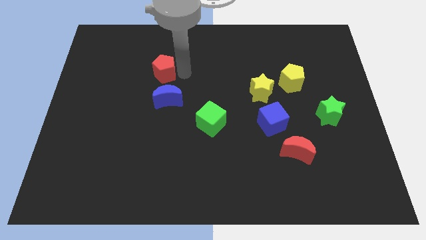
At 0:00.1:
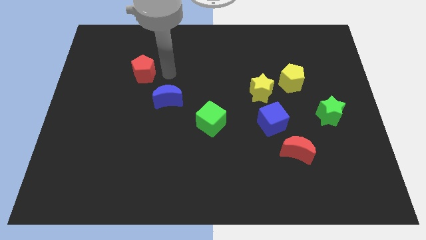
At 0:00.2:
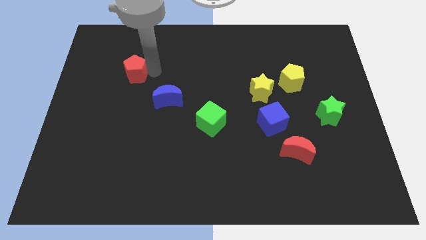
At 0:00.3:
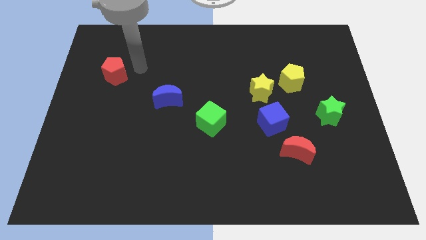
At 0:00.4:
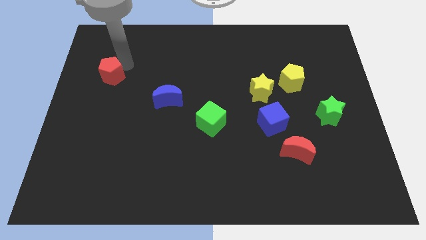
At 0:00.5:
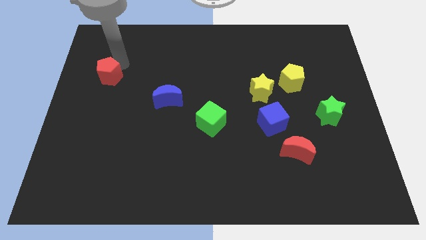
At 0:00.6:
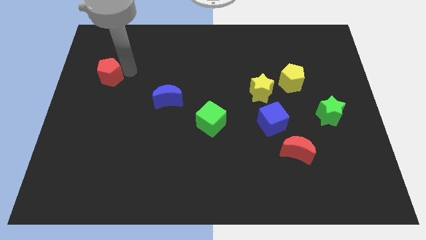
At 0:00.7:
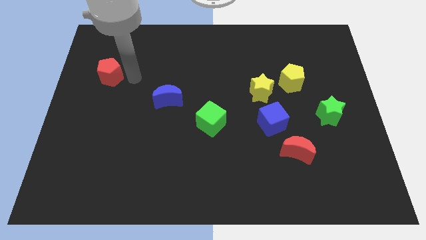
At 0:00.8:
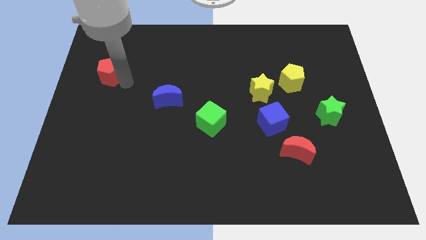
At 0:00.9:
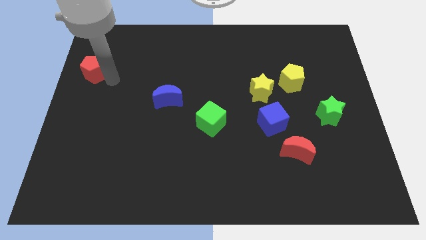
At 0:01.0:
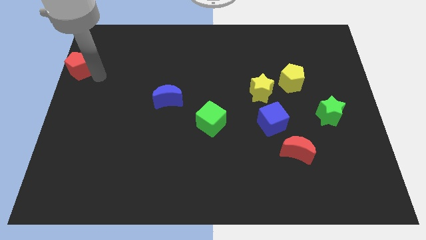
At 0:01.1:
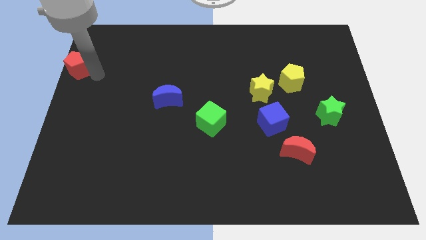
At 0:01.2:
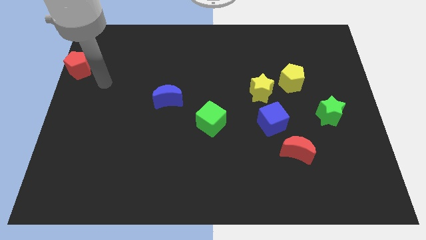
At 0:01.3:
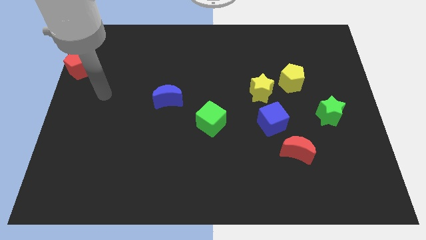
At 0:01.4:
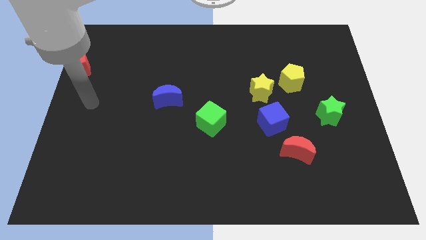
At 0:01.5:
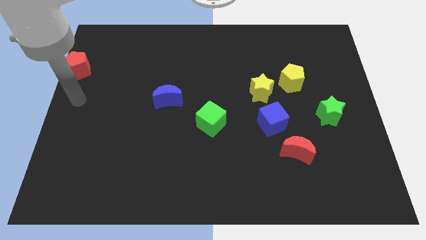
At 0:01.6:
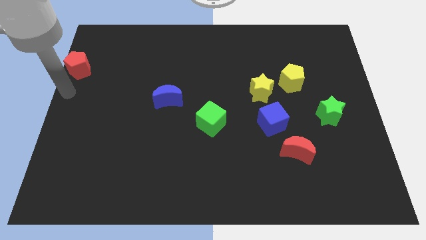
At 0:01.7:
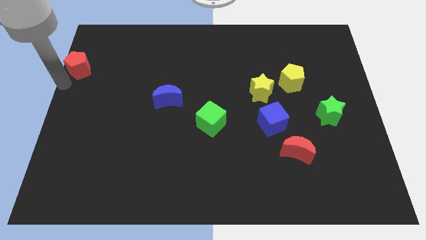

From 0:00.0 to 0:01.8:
move the red pentagon towards the left side

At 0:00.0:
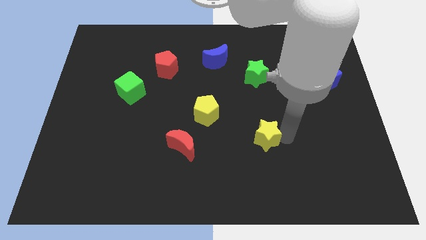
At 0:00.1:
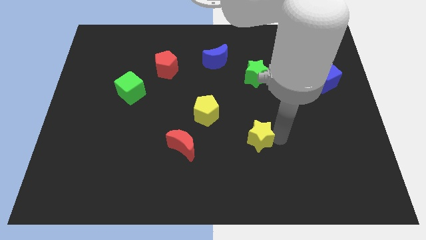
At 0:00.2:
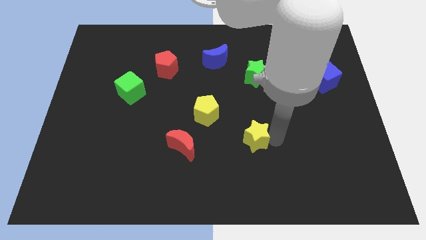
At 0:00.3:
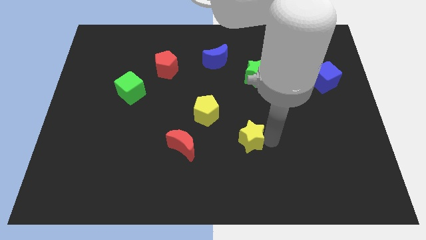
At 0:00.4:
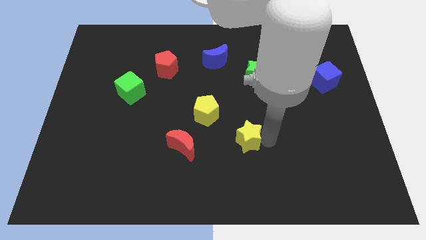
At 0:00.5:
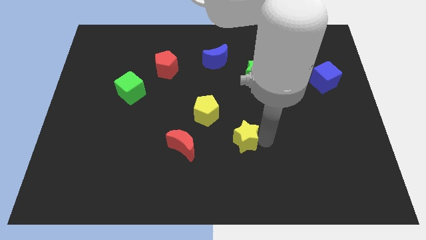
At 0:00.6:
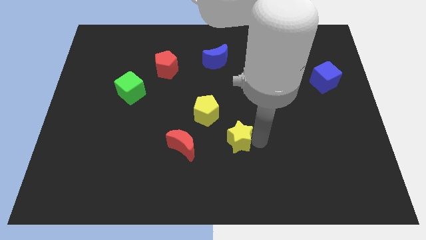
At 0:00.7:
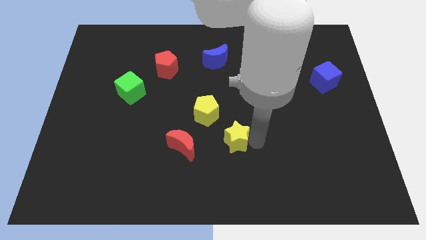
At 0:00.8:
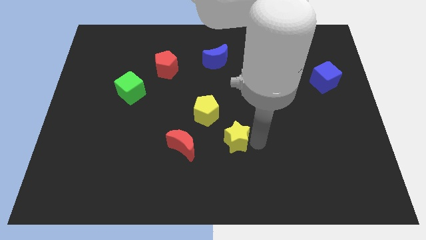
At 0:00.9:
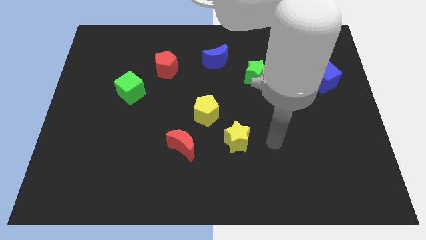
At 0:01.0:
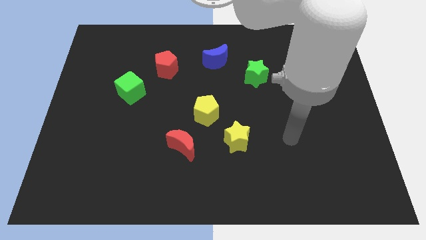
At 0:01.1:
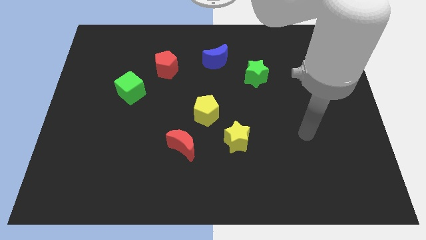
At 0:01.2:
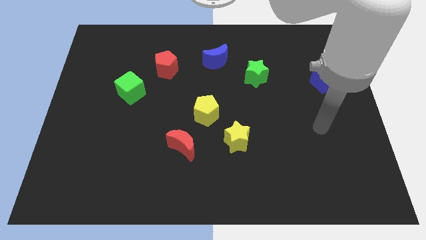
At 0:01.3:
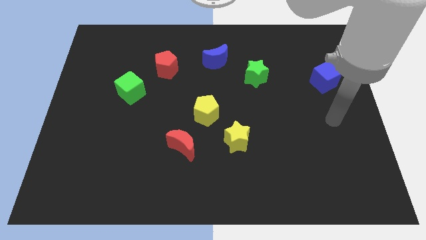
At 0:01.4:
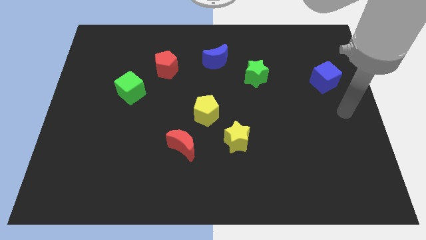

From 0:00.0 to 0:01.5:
place the yellow star to the right of the red crescent

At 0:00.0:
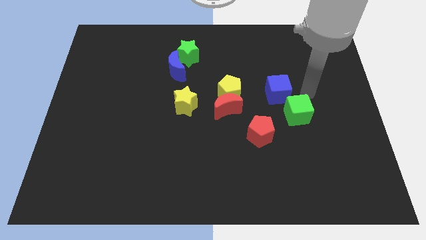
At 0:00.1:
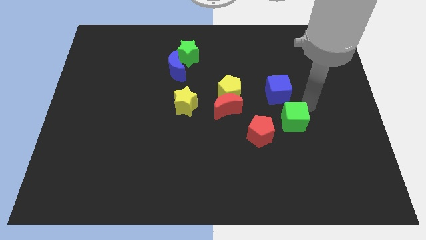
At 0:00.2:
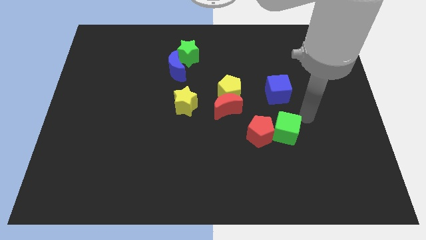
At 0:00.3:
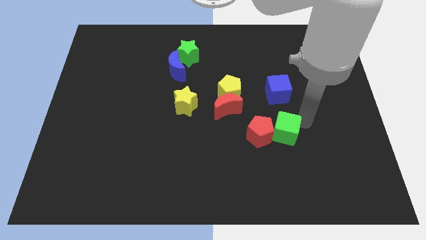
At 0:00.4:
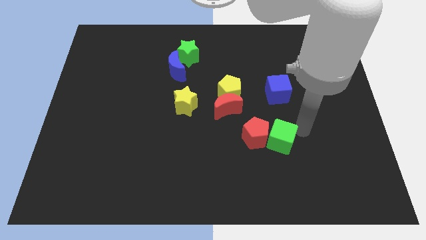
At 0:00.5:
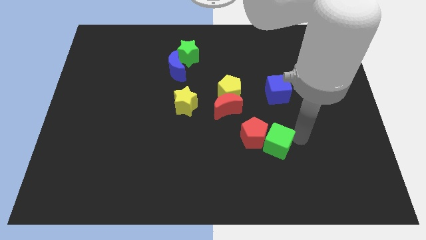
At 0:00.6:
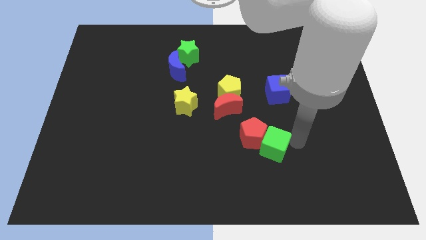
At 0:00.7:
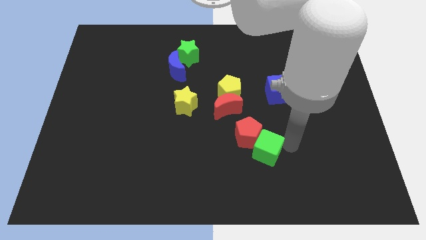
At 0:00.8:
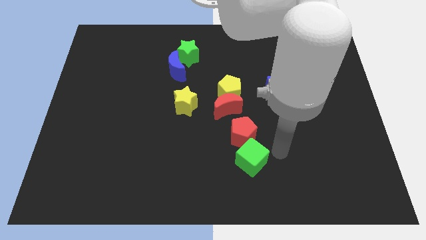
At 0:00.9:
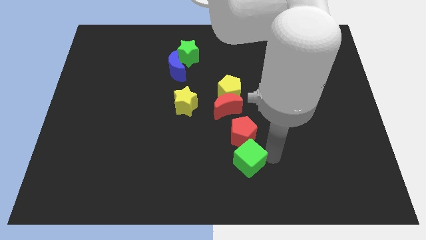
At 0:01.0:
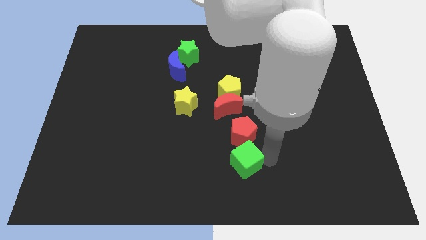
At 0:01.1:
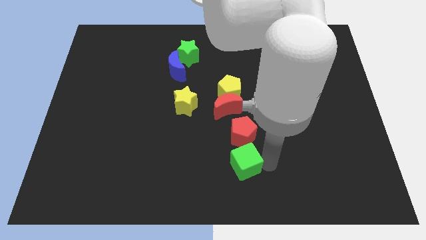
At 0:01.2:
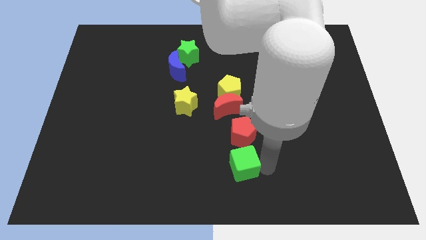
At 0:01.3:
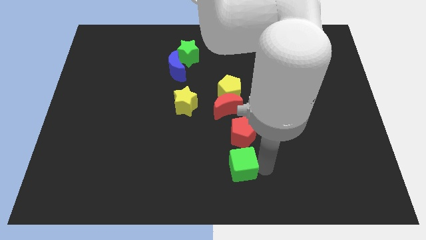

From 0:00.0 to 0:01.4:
move the green cube down to the red pentagon

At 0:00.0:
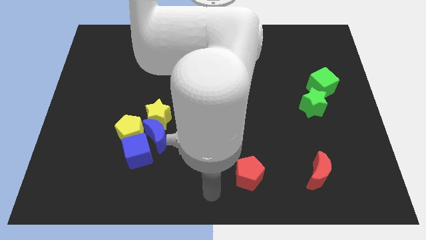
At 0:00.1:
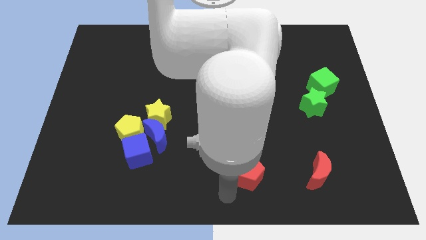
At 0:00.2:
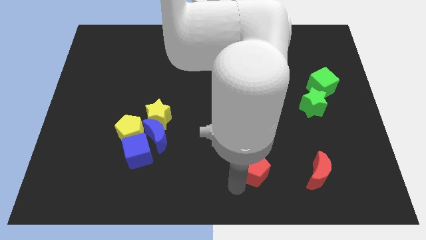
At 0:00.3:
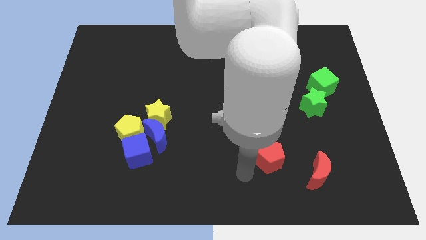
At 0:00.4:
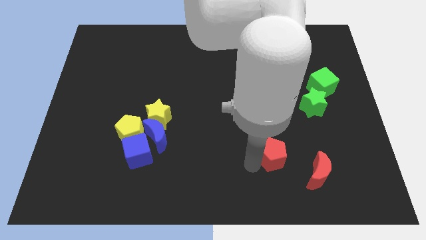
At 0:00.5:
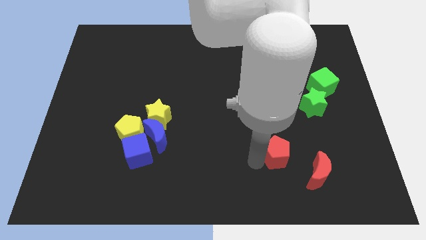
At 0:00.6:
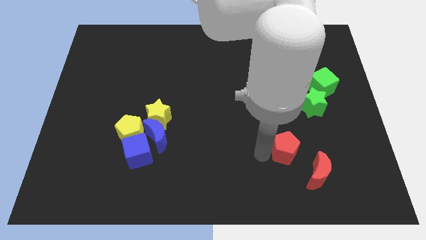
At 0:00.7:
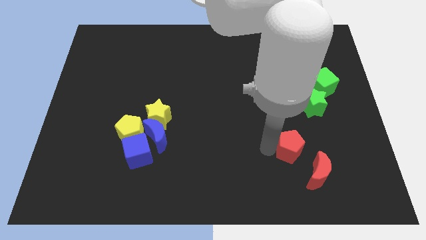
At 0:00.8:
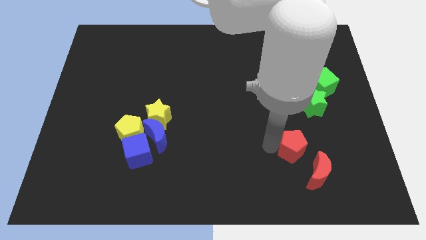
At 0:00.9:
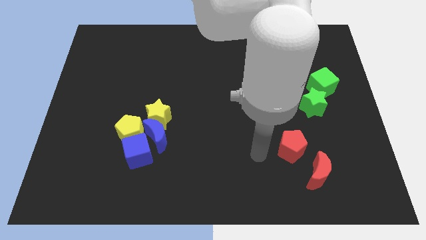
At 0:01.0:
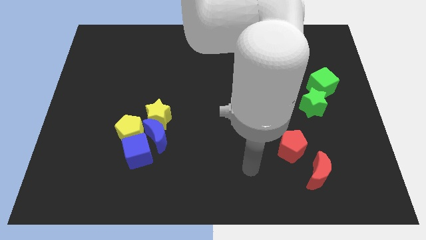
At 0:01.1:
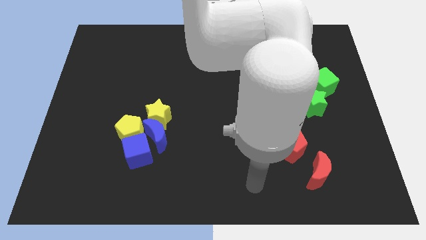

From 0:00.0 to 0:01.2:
push the red pentagon to the right center of the board

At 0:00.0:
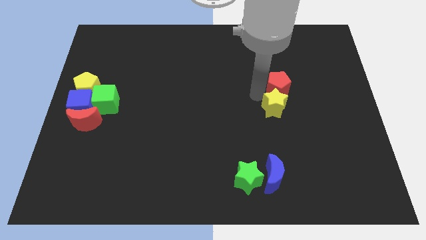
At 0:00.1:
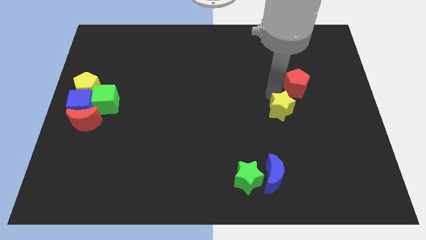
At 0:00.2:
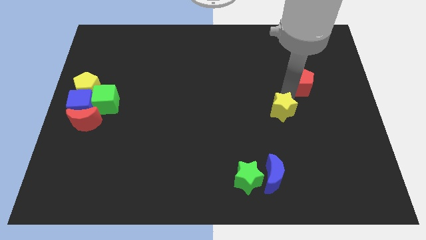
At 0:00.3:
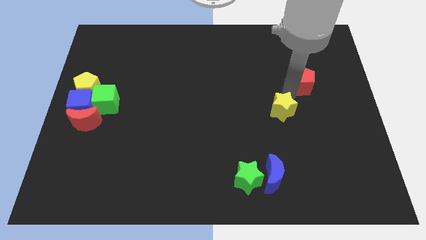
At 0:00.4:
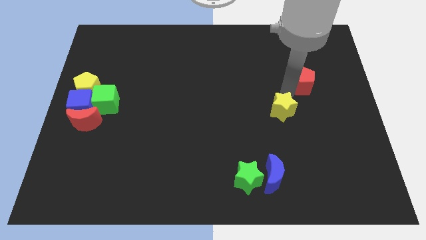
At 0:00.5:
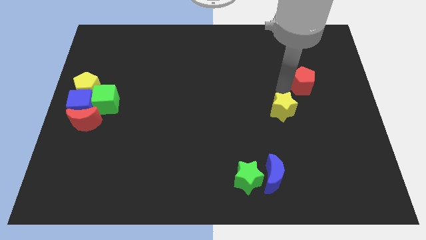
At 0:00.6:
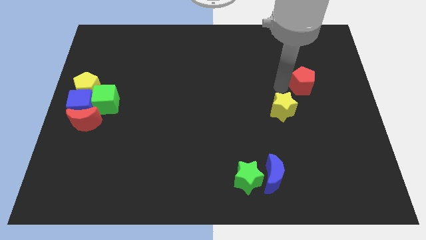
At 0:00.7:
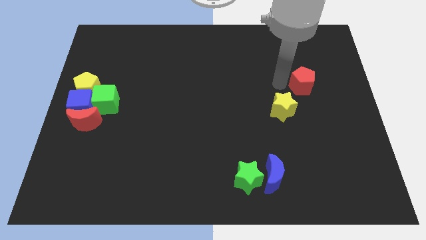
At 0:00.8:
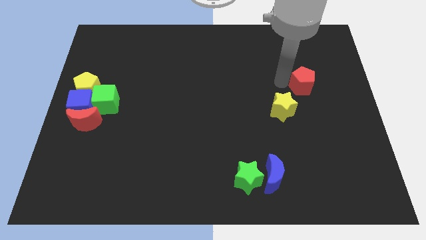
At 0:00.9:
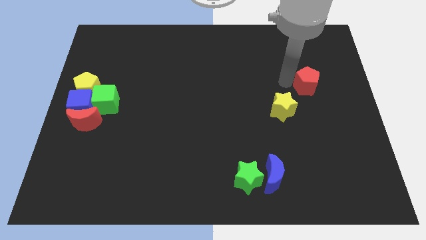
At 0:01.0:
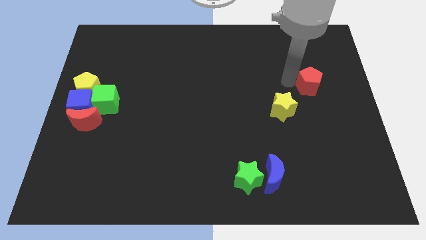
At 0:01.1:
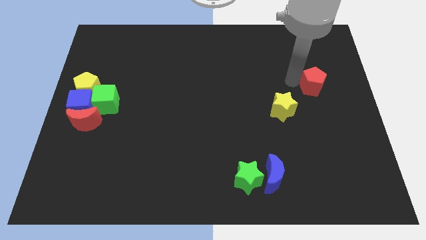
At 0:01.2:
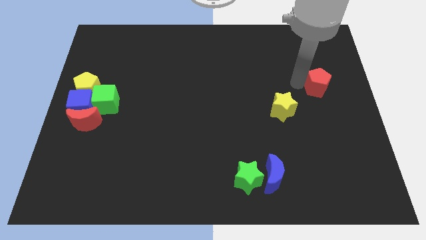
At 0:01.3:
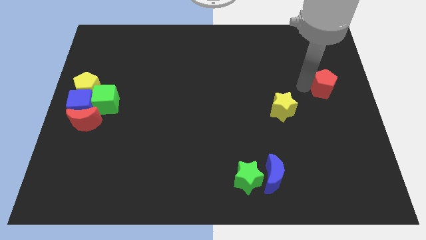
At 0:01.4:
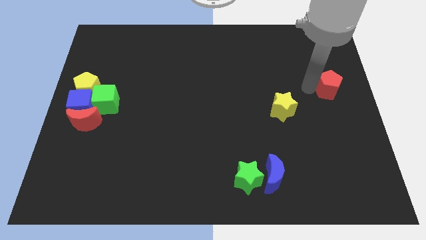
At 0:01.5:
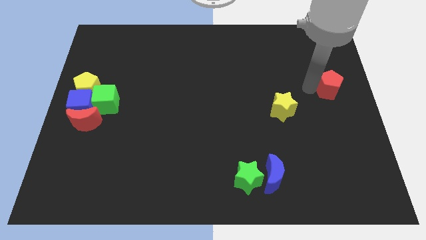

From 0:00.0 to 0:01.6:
separate the red pentagon to the right side

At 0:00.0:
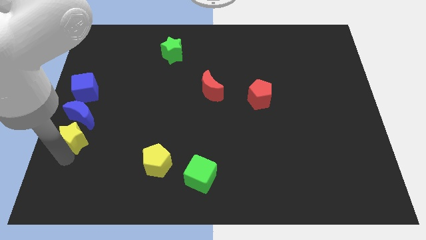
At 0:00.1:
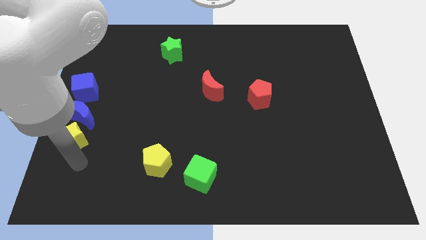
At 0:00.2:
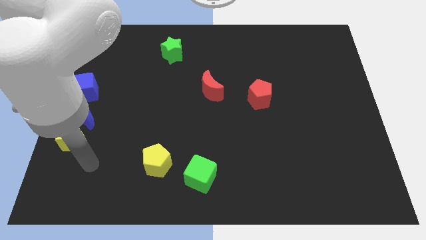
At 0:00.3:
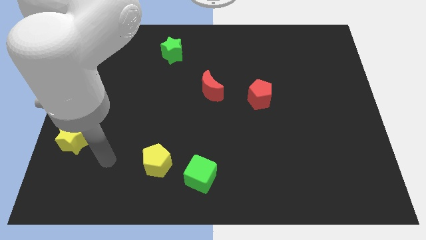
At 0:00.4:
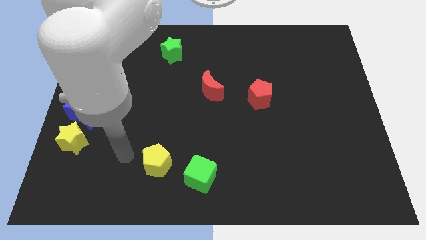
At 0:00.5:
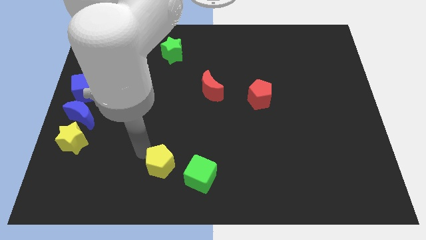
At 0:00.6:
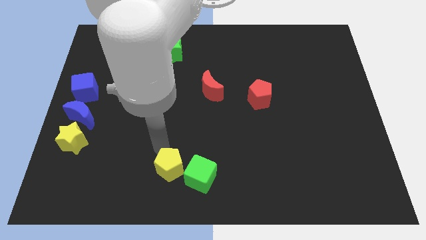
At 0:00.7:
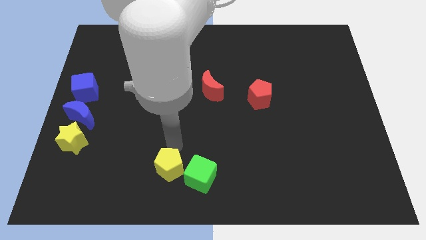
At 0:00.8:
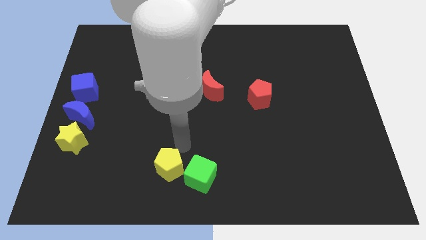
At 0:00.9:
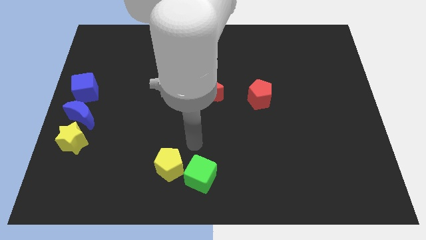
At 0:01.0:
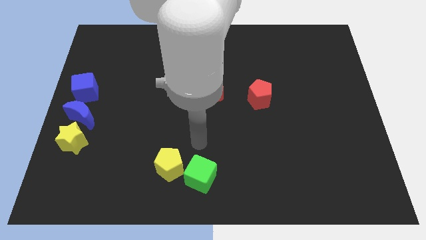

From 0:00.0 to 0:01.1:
move the yellow pentagon slightly to the right

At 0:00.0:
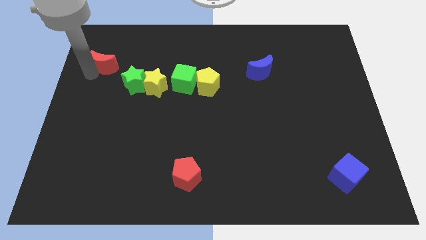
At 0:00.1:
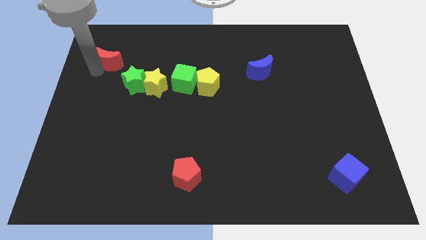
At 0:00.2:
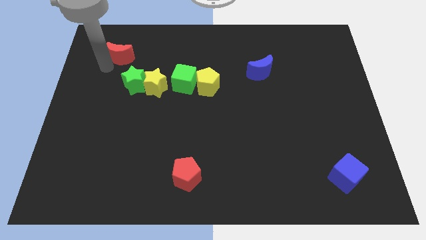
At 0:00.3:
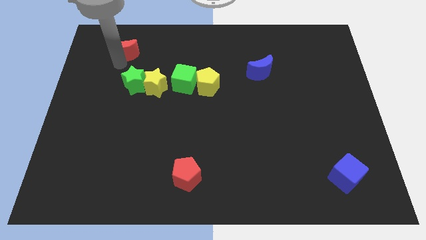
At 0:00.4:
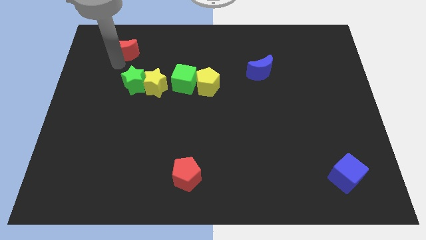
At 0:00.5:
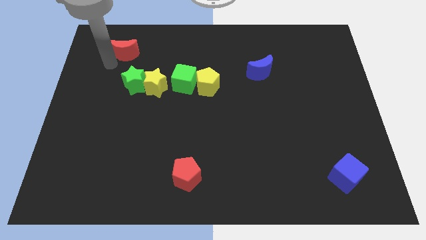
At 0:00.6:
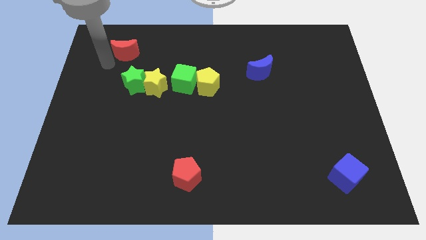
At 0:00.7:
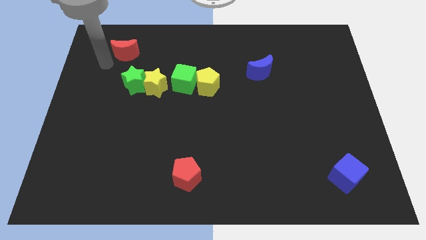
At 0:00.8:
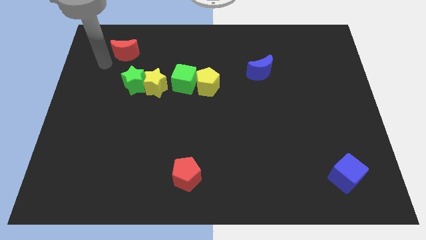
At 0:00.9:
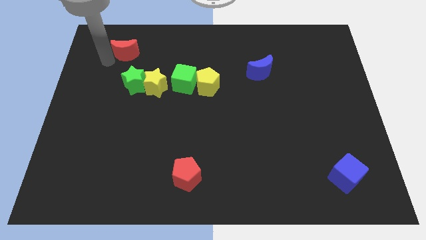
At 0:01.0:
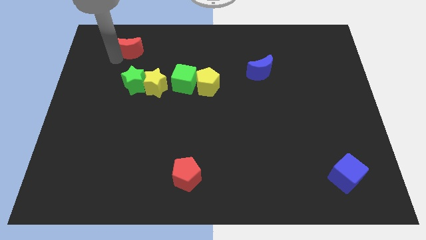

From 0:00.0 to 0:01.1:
put the red moon vertically above the green star
